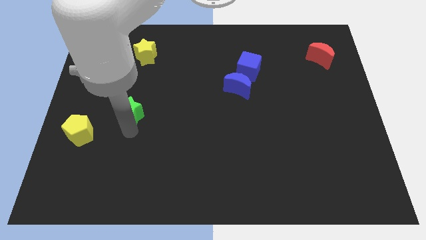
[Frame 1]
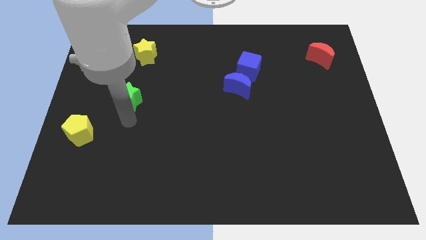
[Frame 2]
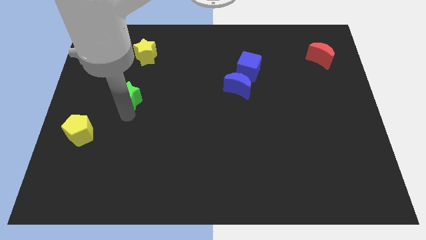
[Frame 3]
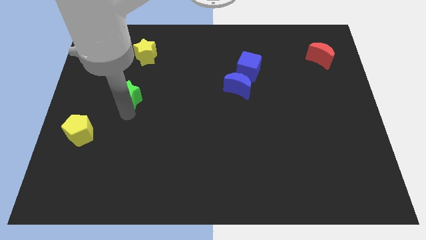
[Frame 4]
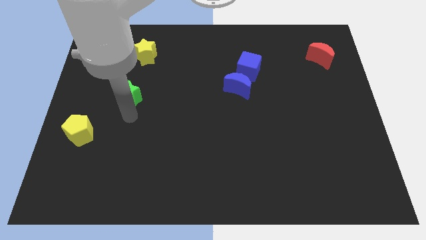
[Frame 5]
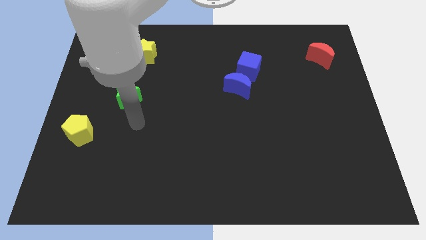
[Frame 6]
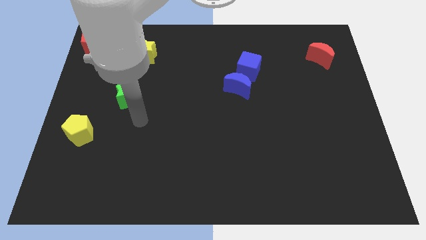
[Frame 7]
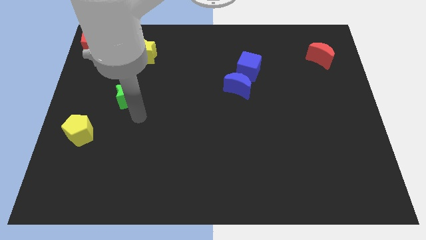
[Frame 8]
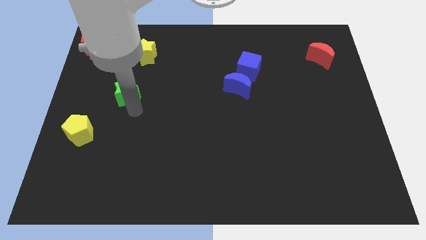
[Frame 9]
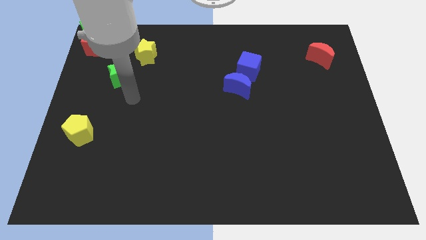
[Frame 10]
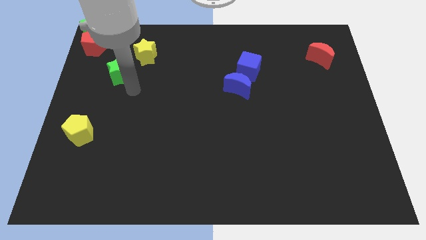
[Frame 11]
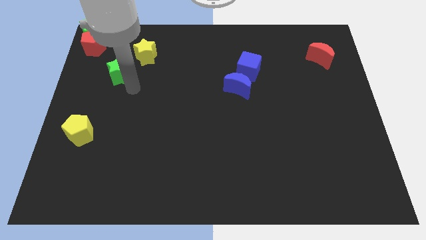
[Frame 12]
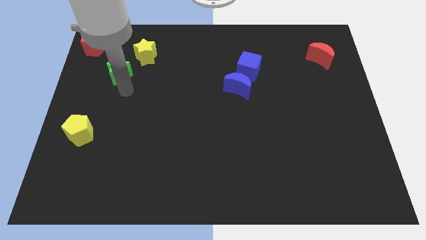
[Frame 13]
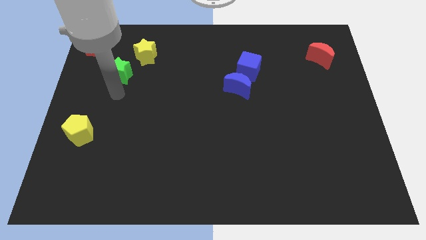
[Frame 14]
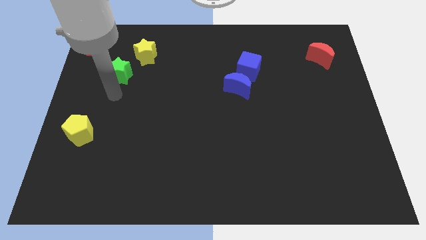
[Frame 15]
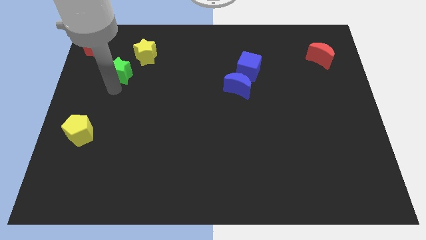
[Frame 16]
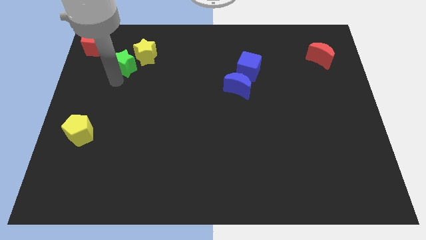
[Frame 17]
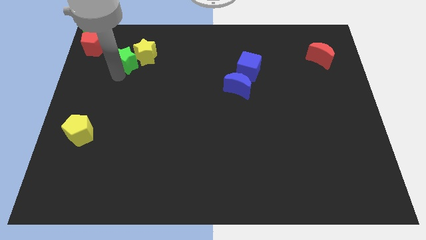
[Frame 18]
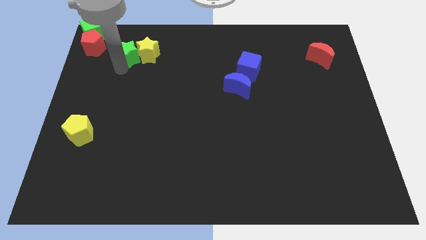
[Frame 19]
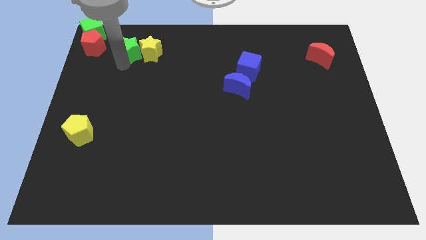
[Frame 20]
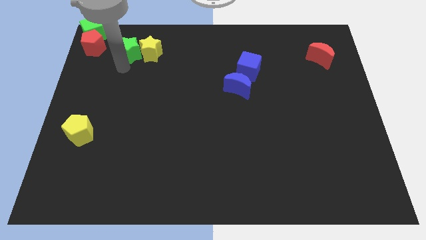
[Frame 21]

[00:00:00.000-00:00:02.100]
push the green star to the left of yellow star

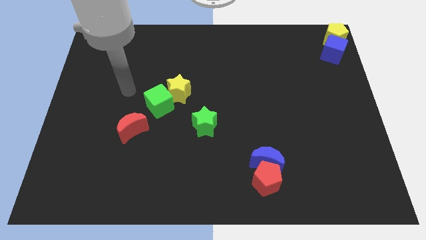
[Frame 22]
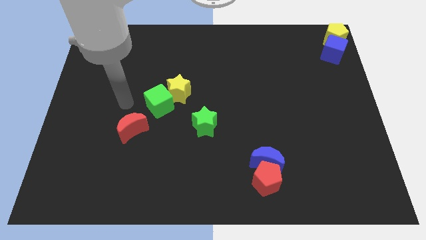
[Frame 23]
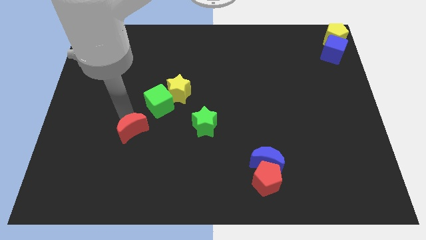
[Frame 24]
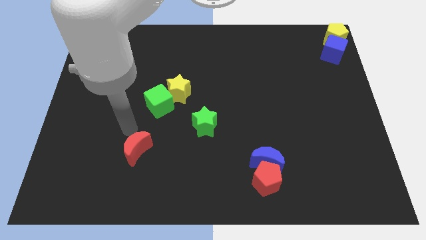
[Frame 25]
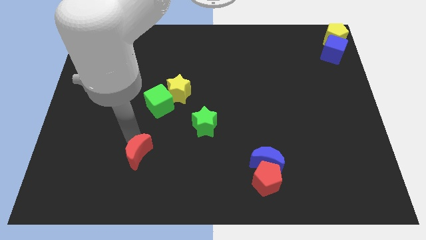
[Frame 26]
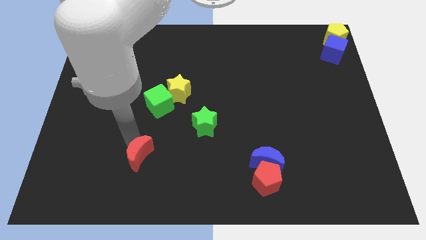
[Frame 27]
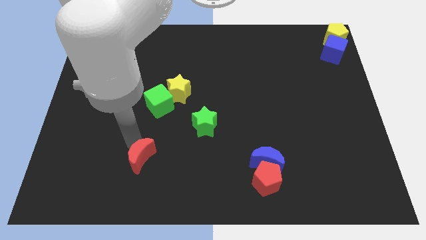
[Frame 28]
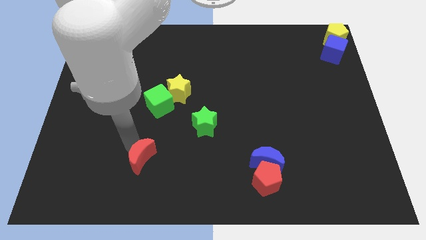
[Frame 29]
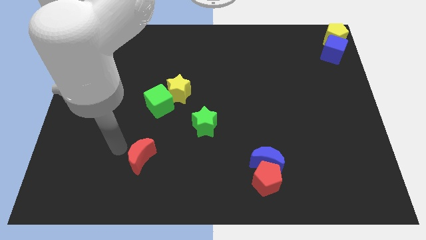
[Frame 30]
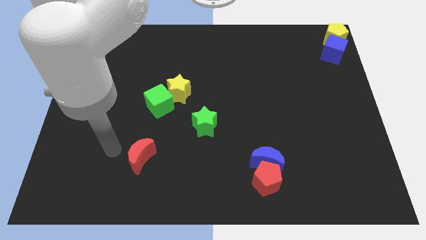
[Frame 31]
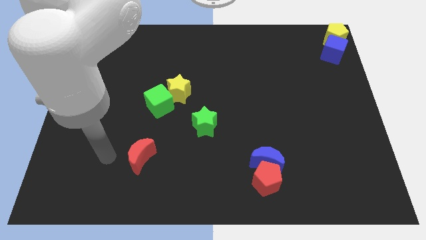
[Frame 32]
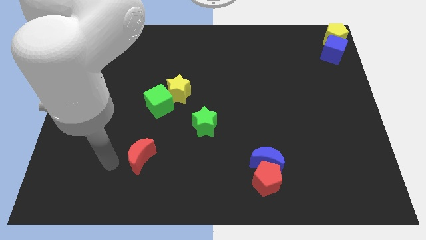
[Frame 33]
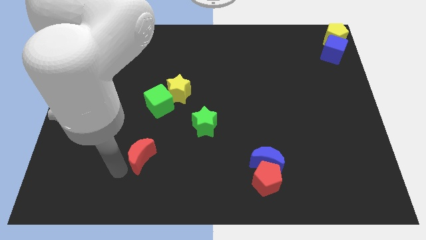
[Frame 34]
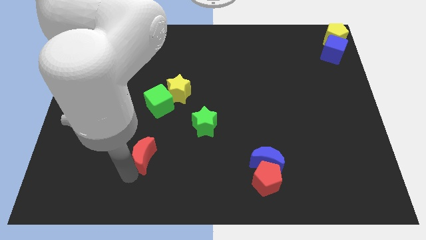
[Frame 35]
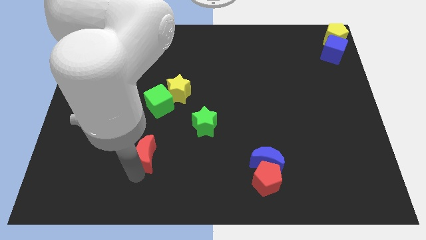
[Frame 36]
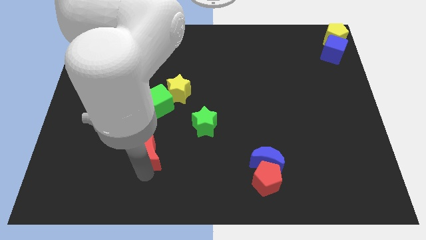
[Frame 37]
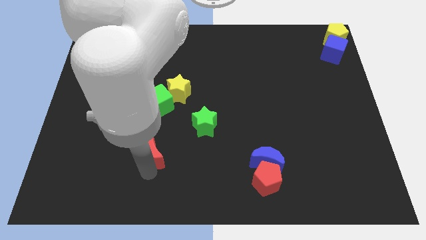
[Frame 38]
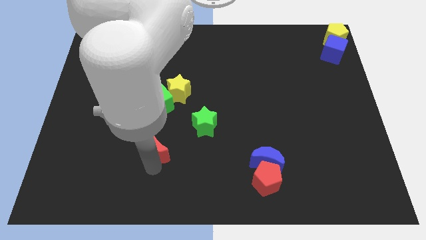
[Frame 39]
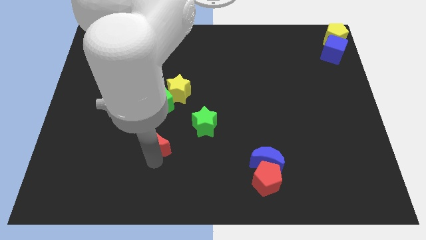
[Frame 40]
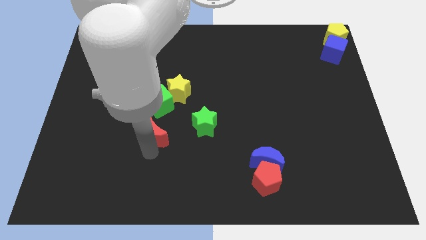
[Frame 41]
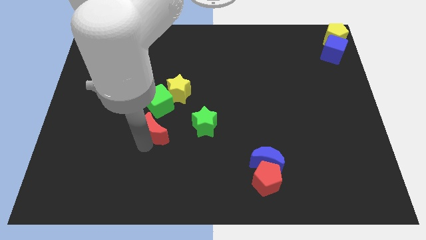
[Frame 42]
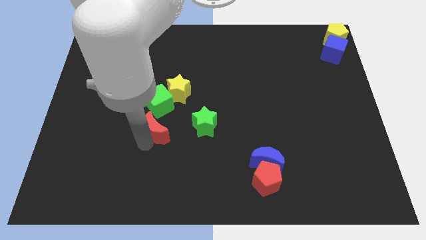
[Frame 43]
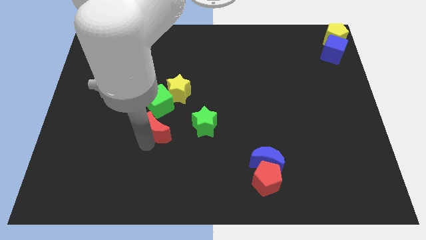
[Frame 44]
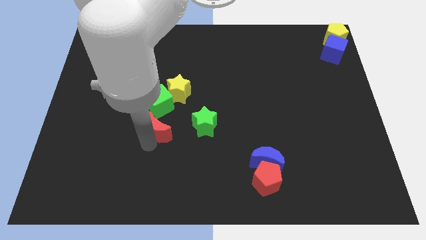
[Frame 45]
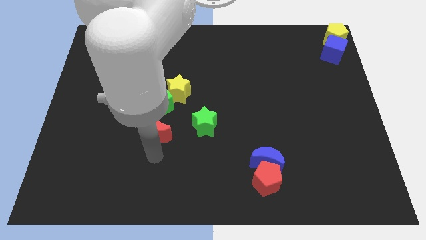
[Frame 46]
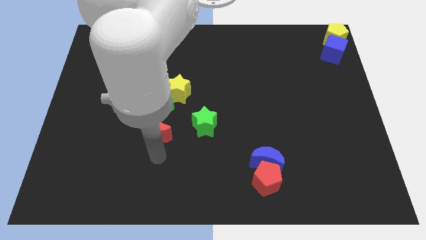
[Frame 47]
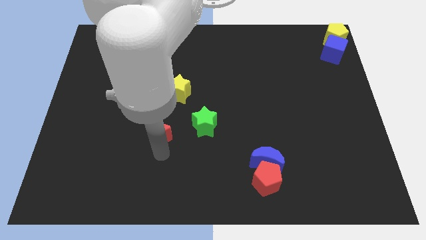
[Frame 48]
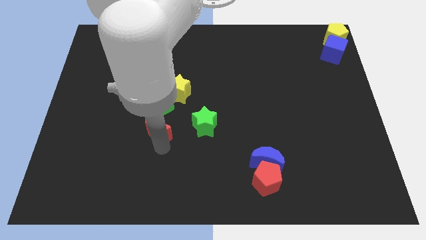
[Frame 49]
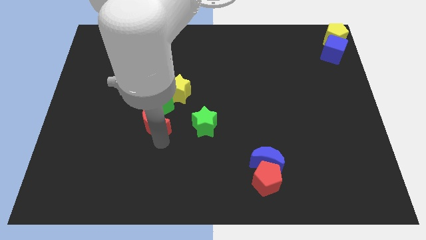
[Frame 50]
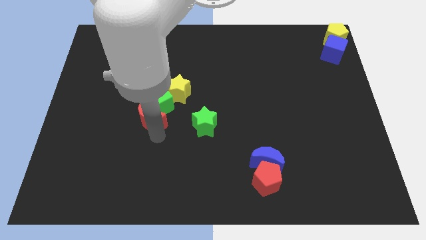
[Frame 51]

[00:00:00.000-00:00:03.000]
move the red moon to the bottom side of the green cube

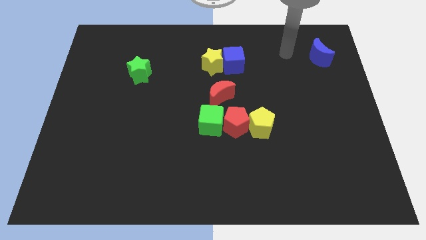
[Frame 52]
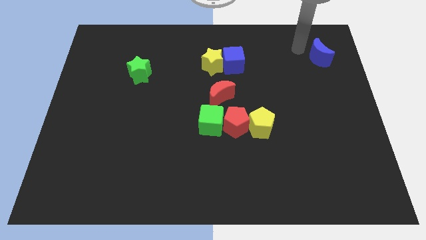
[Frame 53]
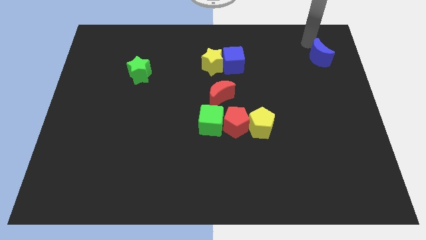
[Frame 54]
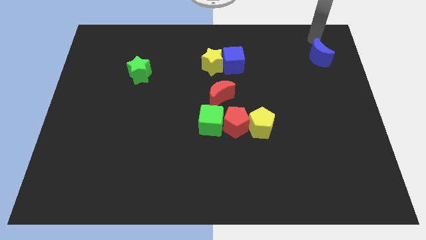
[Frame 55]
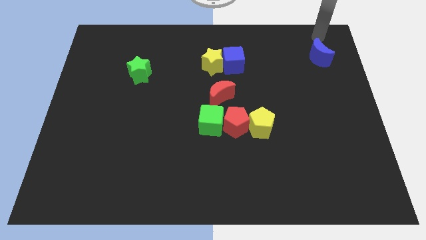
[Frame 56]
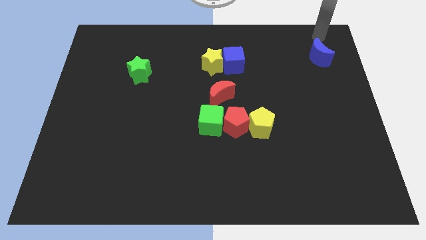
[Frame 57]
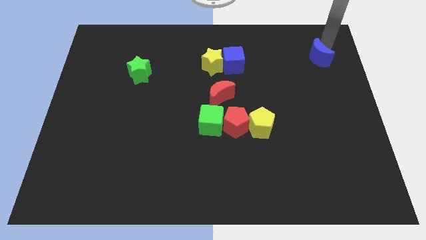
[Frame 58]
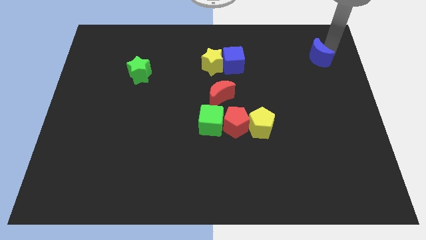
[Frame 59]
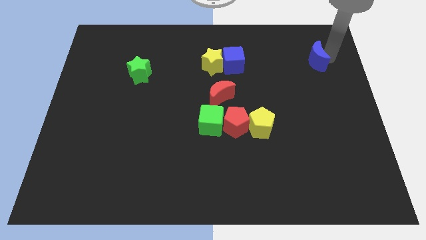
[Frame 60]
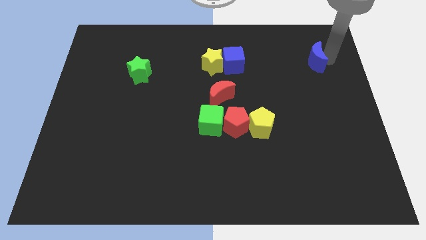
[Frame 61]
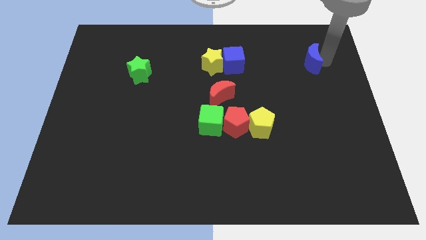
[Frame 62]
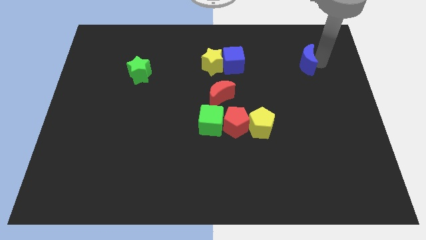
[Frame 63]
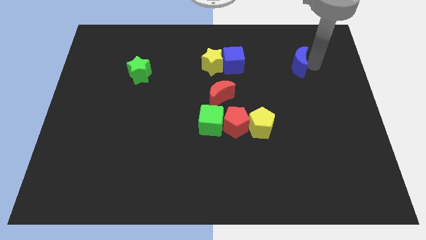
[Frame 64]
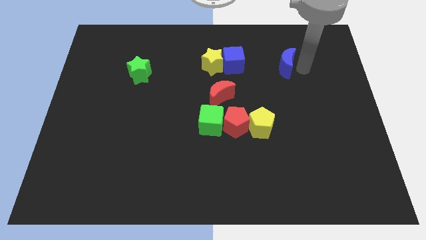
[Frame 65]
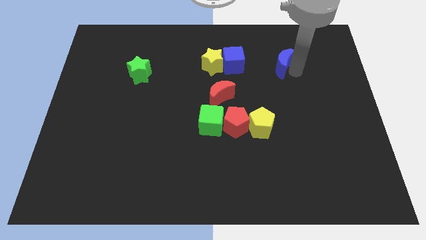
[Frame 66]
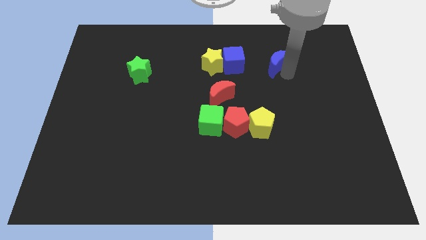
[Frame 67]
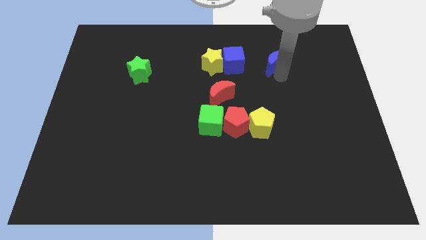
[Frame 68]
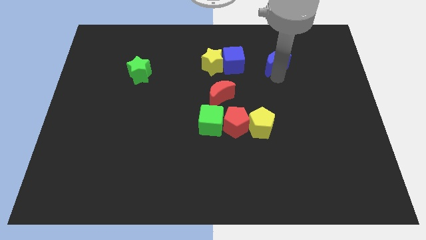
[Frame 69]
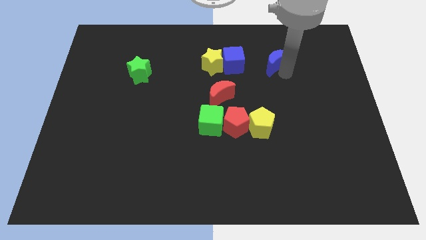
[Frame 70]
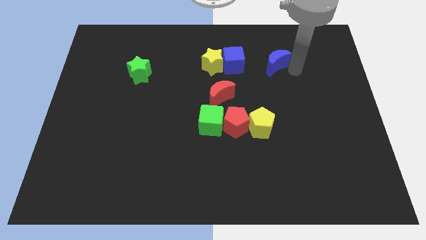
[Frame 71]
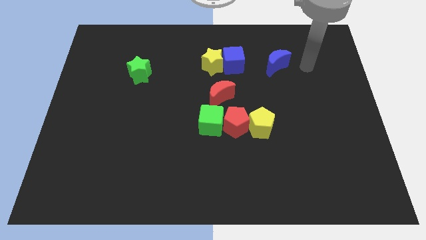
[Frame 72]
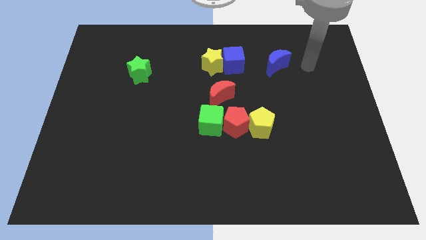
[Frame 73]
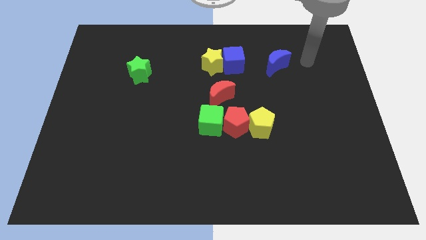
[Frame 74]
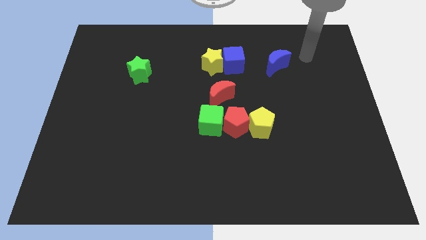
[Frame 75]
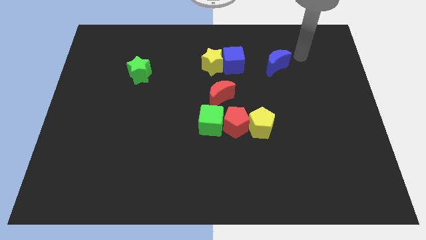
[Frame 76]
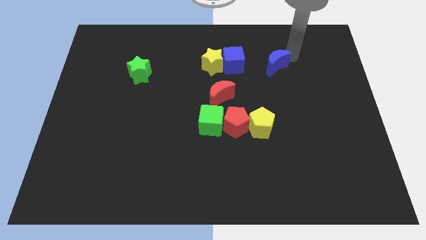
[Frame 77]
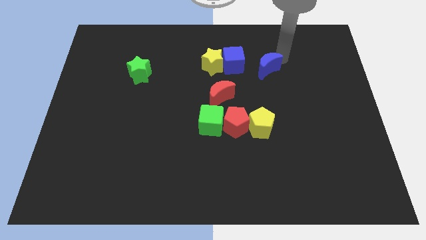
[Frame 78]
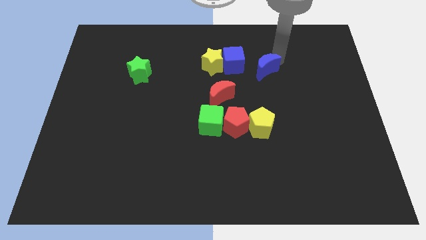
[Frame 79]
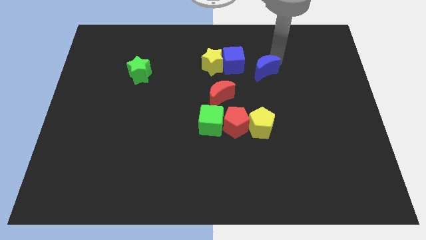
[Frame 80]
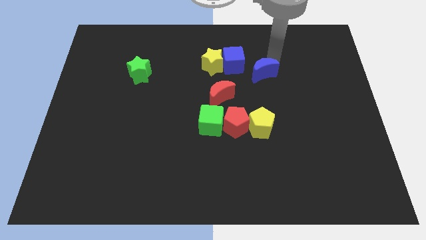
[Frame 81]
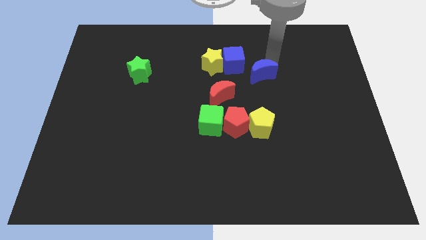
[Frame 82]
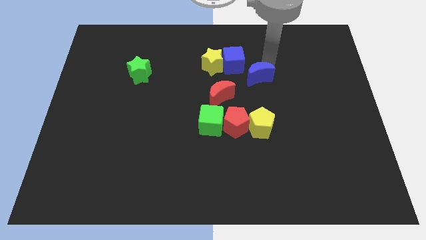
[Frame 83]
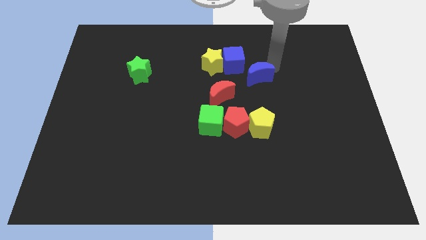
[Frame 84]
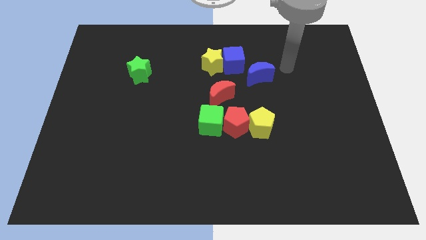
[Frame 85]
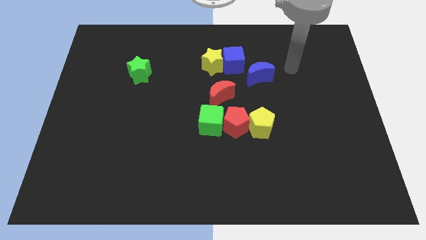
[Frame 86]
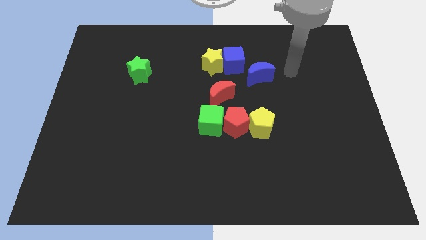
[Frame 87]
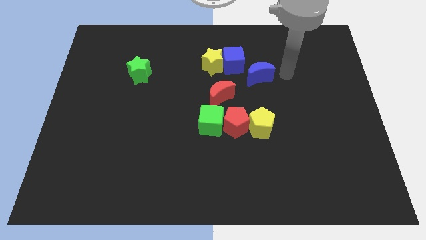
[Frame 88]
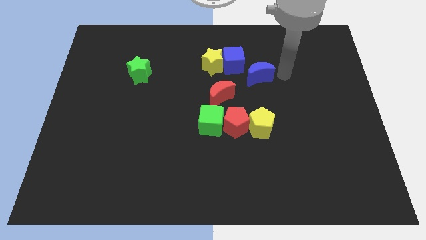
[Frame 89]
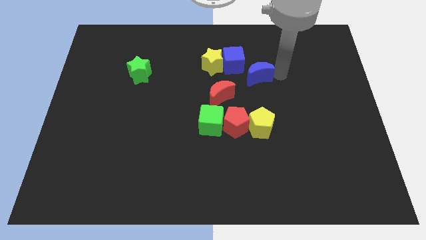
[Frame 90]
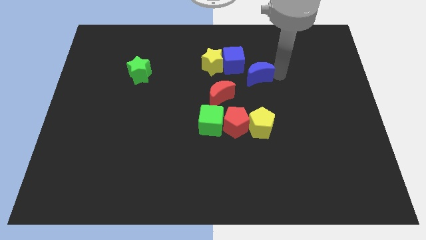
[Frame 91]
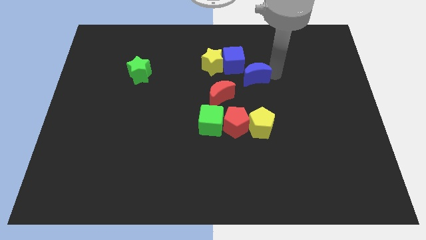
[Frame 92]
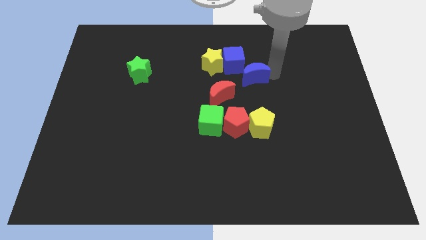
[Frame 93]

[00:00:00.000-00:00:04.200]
slide the blue moon to the bottom right of the blue cube
